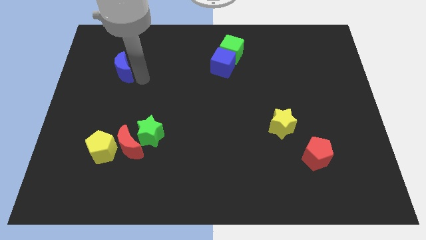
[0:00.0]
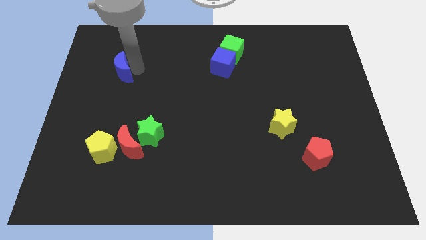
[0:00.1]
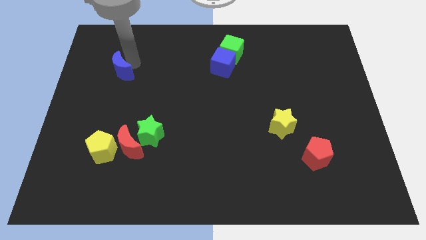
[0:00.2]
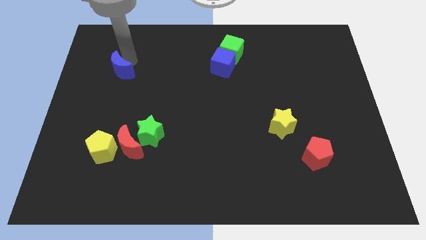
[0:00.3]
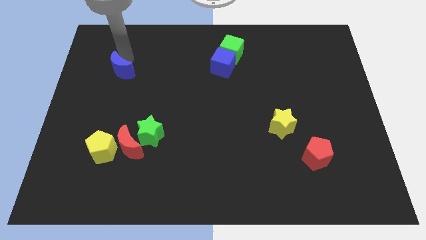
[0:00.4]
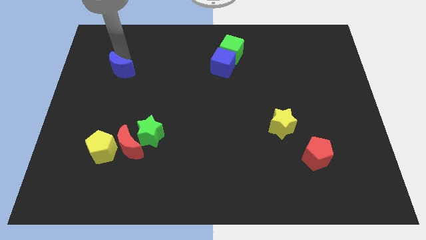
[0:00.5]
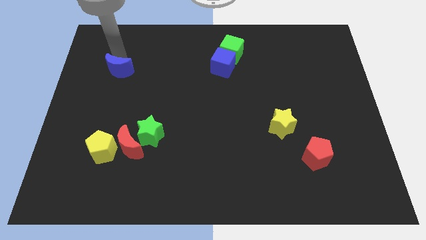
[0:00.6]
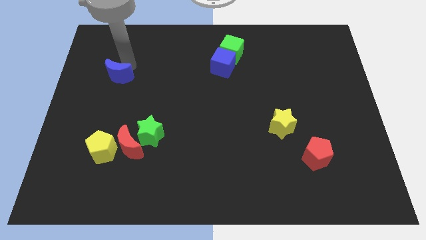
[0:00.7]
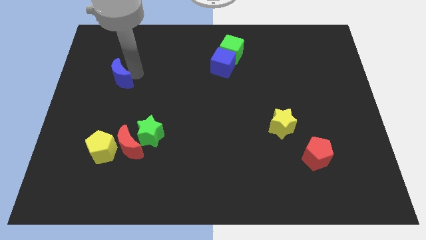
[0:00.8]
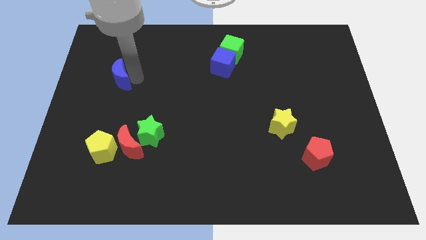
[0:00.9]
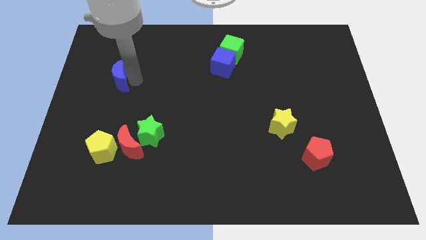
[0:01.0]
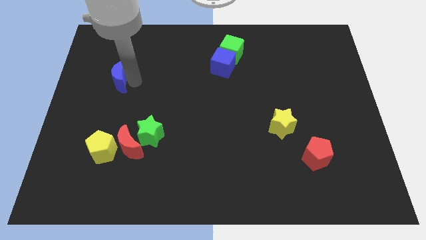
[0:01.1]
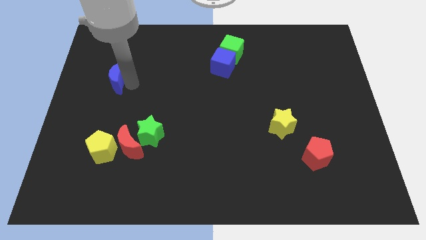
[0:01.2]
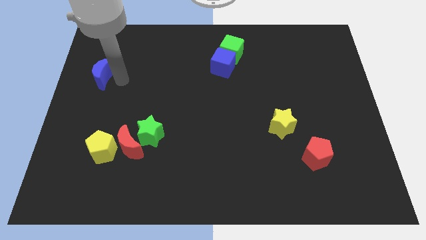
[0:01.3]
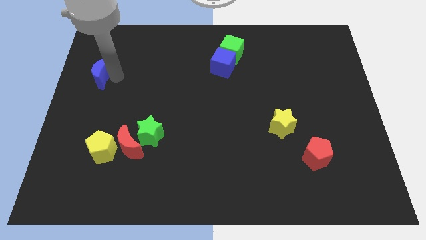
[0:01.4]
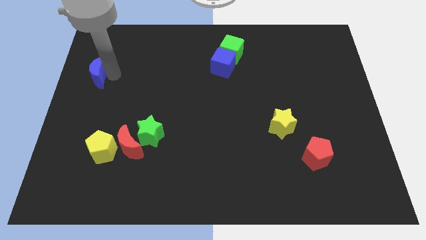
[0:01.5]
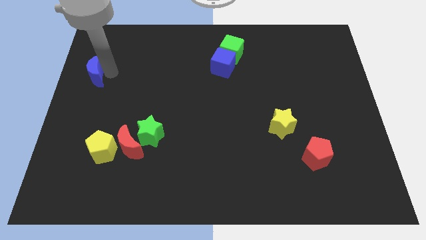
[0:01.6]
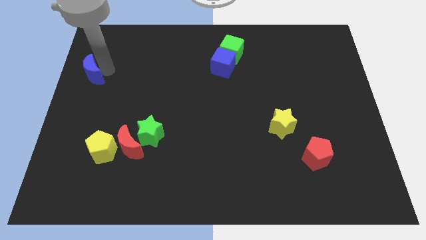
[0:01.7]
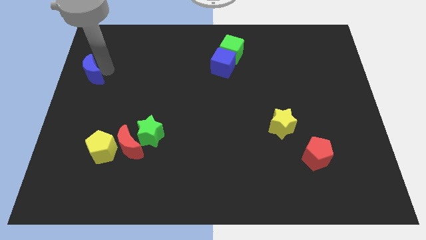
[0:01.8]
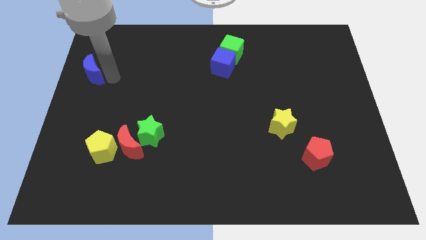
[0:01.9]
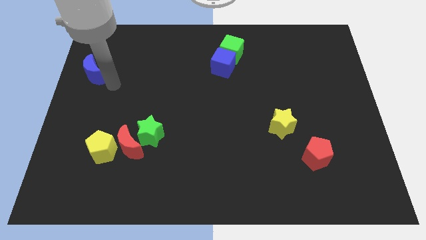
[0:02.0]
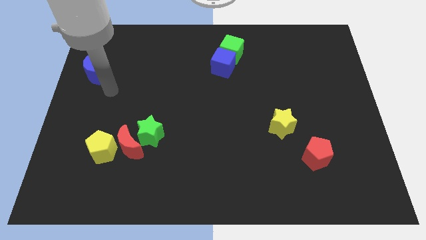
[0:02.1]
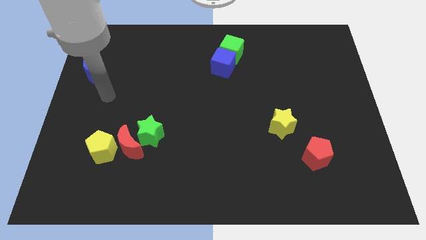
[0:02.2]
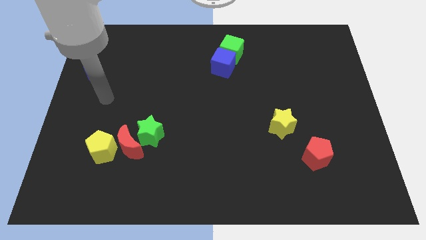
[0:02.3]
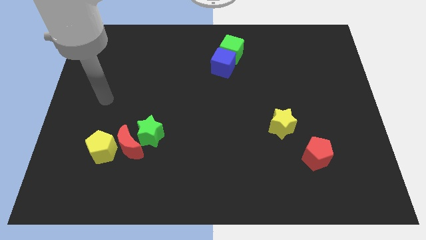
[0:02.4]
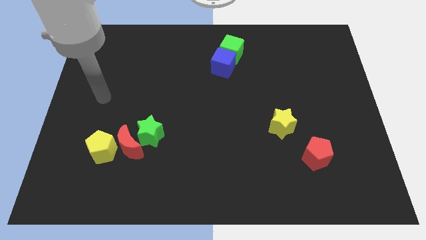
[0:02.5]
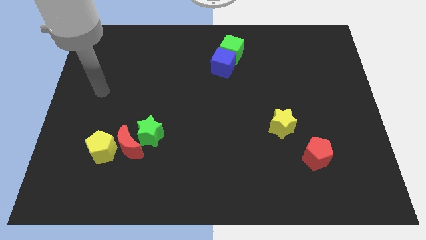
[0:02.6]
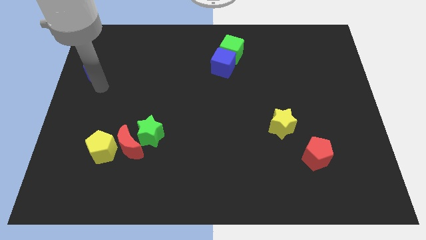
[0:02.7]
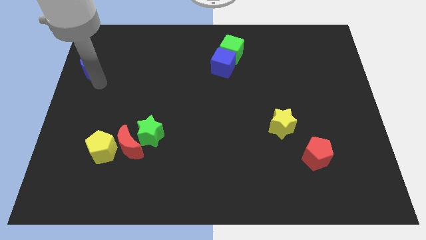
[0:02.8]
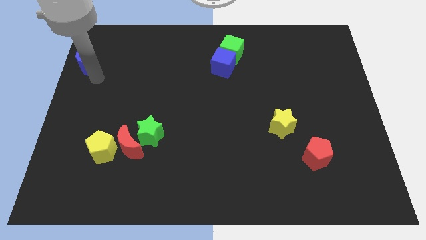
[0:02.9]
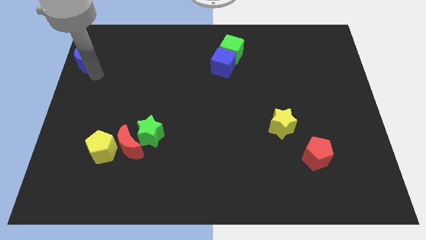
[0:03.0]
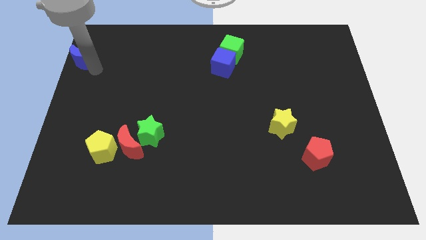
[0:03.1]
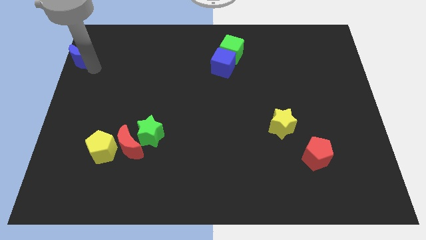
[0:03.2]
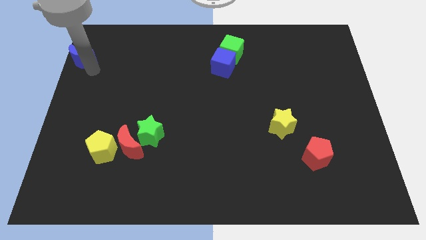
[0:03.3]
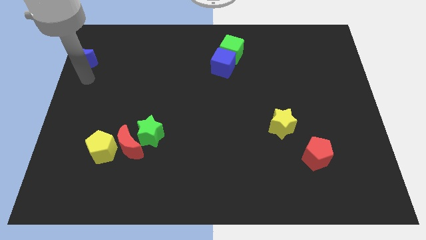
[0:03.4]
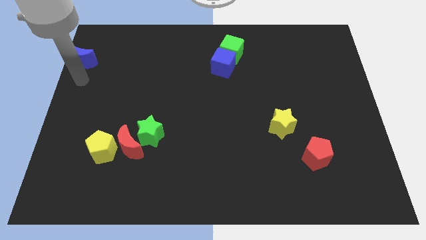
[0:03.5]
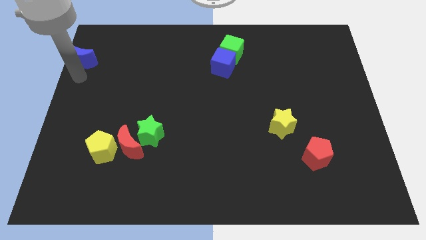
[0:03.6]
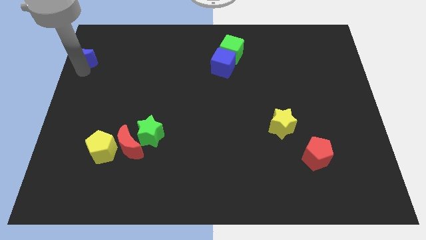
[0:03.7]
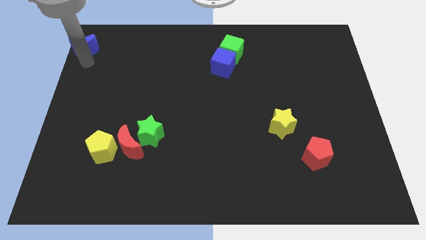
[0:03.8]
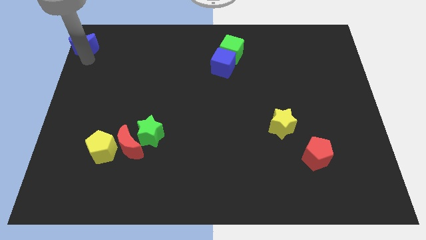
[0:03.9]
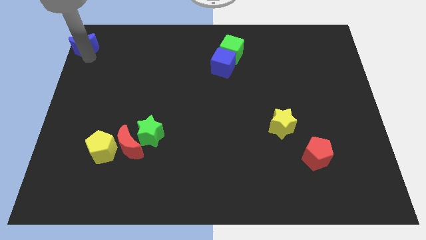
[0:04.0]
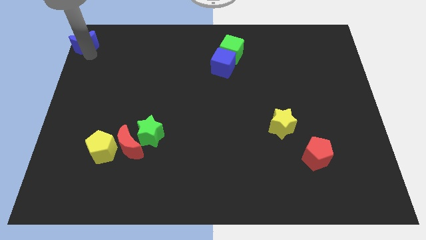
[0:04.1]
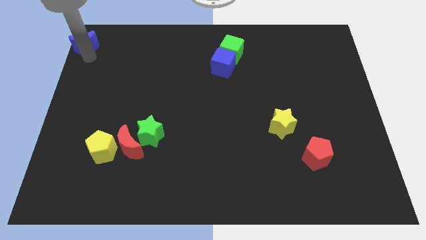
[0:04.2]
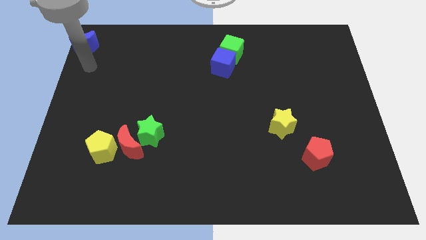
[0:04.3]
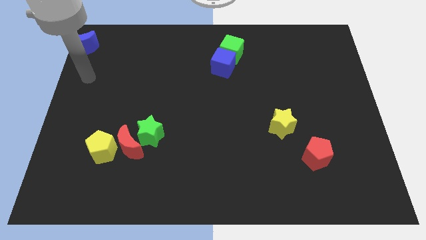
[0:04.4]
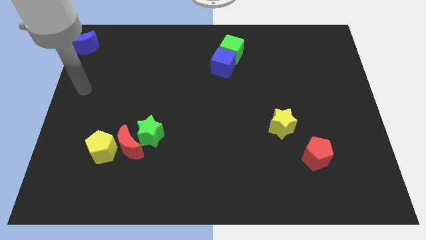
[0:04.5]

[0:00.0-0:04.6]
move the blue crescent to the top left corner

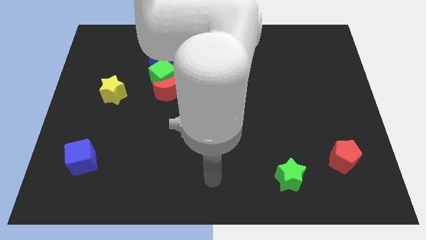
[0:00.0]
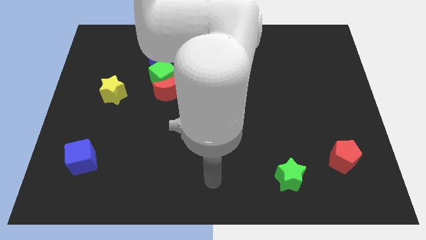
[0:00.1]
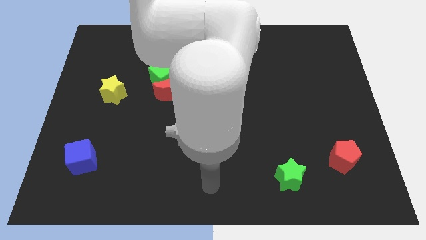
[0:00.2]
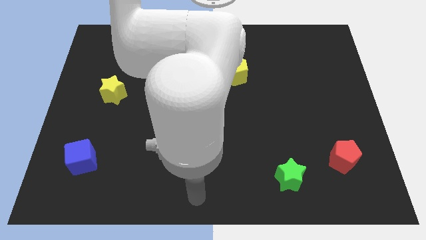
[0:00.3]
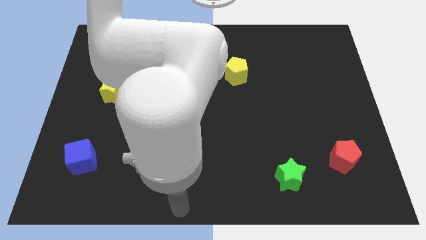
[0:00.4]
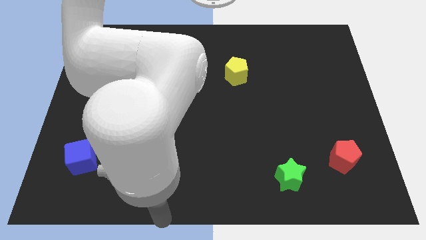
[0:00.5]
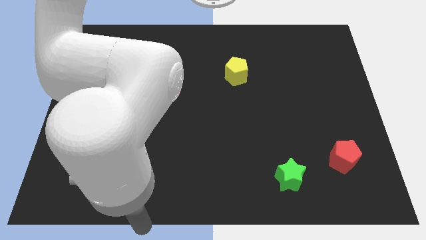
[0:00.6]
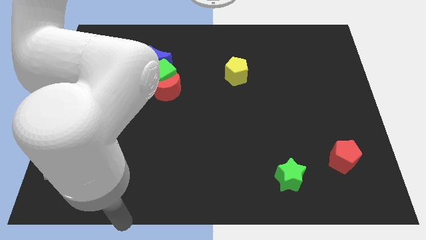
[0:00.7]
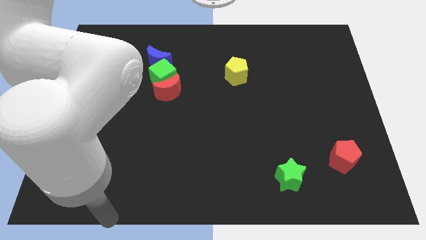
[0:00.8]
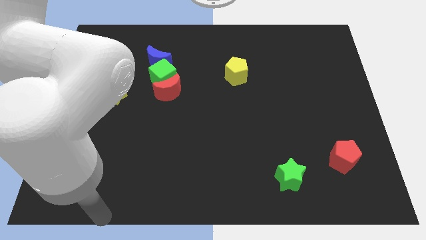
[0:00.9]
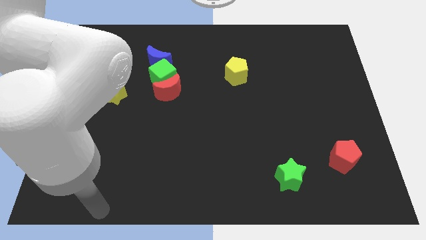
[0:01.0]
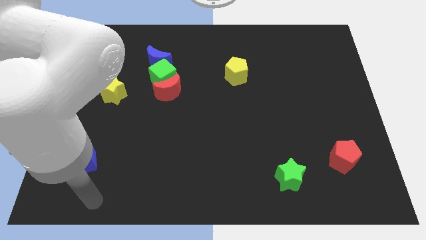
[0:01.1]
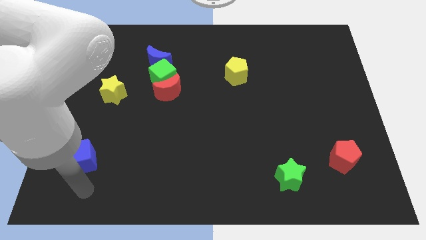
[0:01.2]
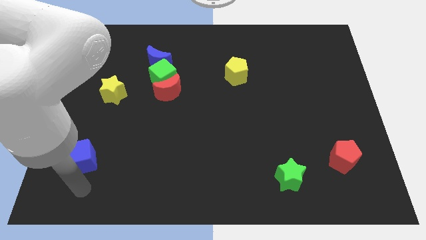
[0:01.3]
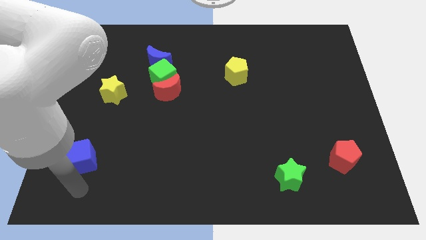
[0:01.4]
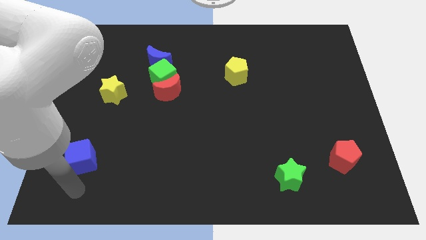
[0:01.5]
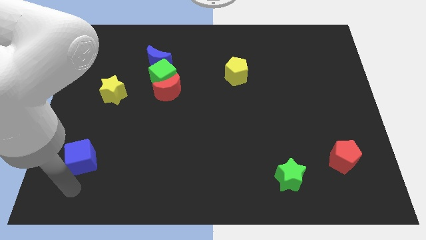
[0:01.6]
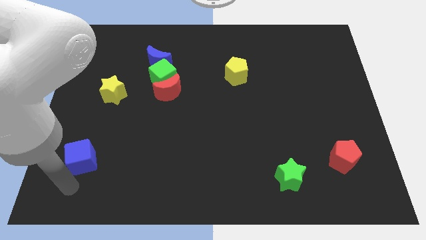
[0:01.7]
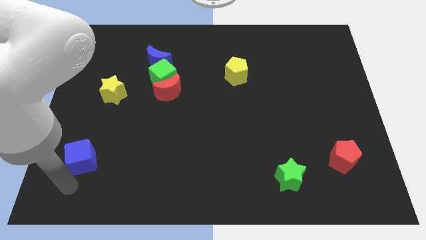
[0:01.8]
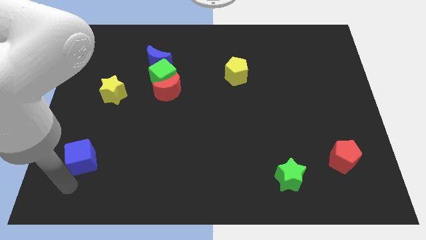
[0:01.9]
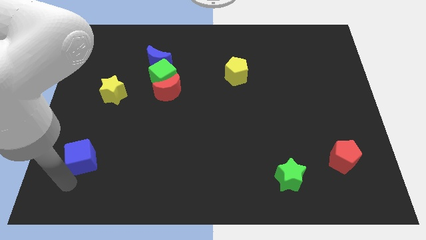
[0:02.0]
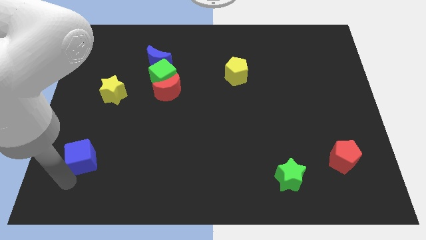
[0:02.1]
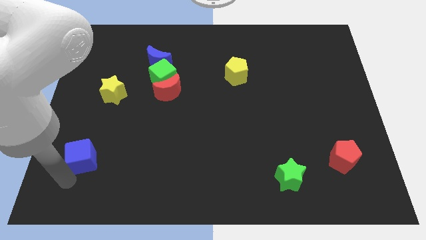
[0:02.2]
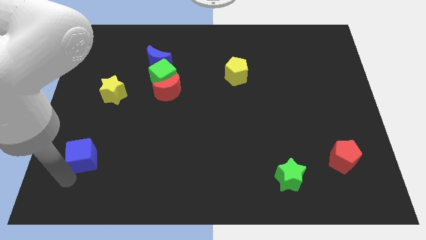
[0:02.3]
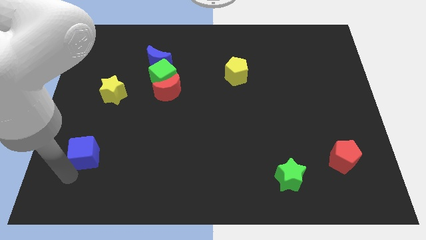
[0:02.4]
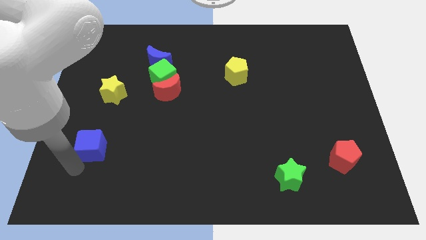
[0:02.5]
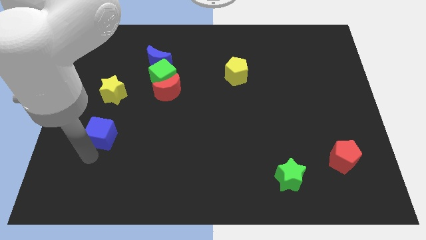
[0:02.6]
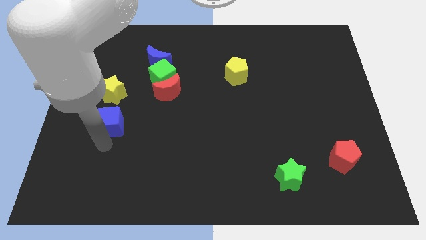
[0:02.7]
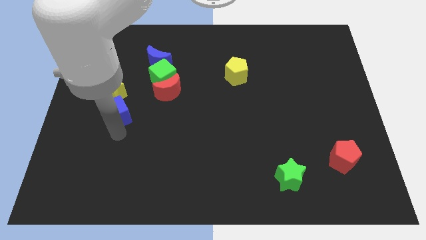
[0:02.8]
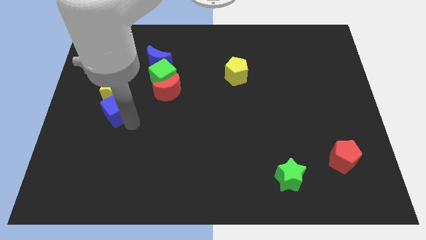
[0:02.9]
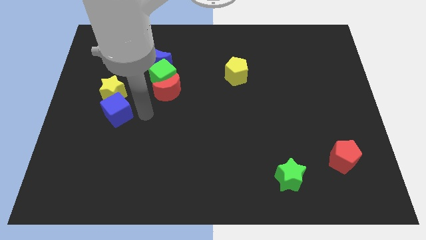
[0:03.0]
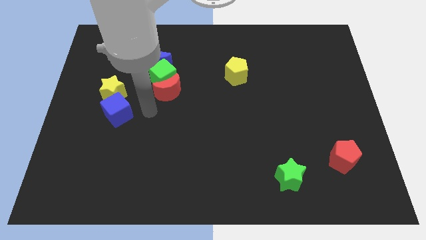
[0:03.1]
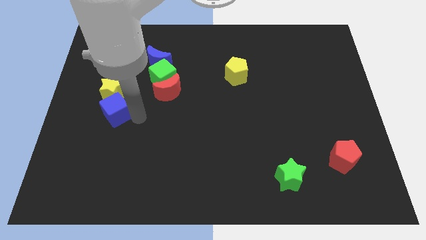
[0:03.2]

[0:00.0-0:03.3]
push the blue cube towards yellow star

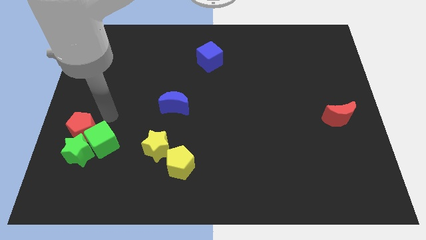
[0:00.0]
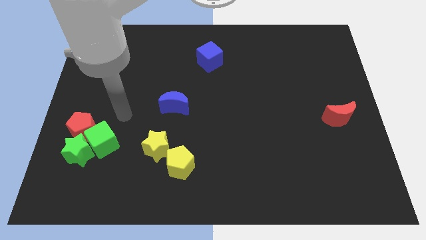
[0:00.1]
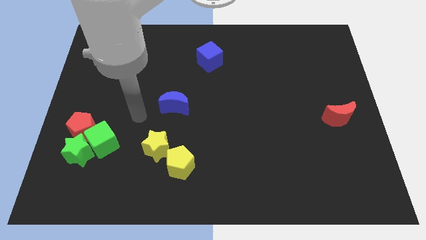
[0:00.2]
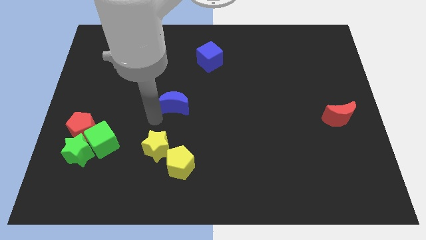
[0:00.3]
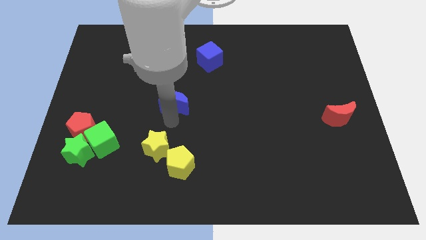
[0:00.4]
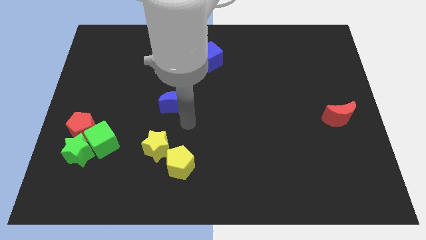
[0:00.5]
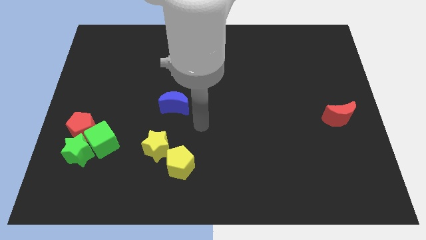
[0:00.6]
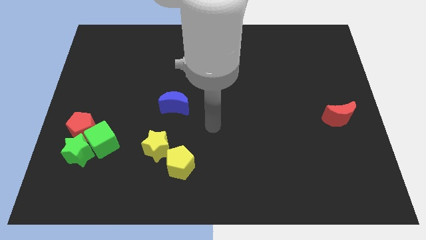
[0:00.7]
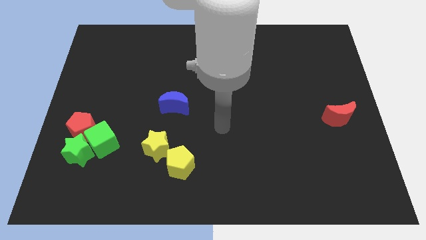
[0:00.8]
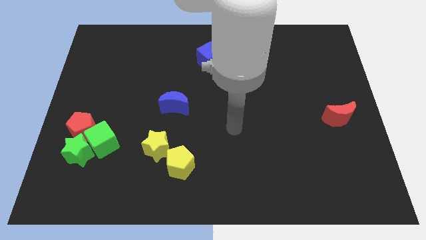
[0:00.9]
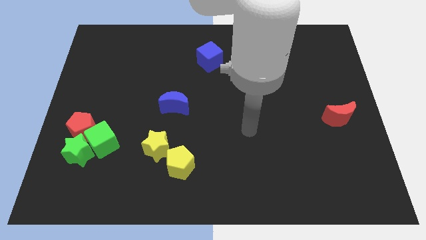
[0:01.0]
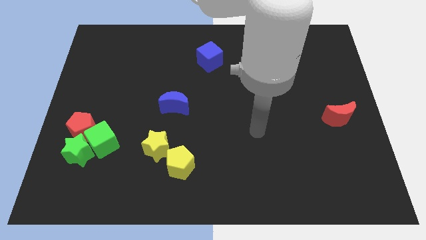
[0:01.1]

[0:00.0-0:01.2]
move your arm to the center of the board
